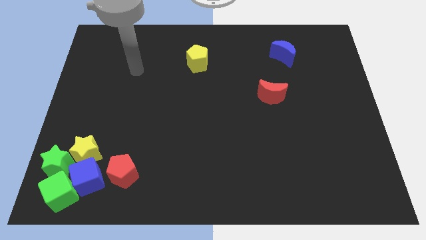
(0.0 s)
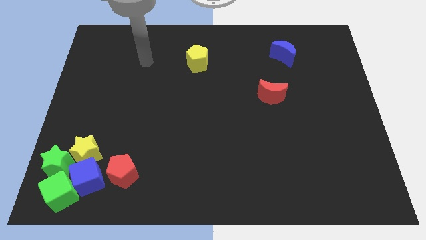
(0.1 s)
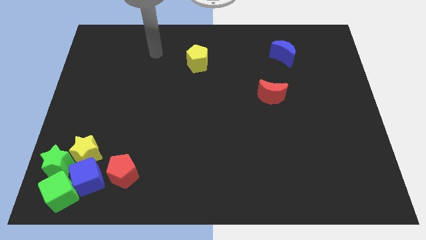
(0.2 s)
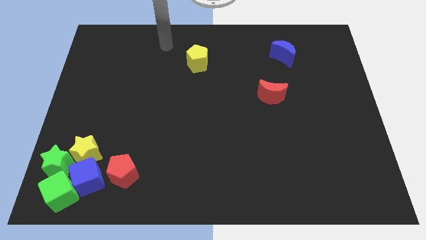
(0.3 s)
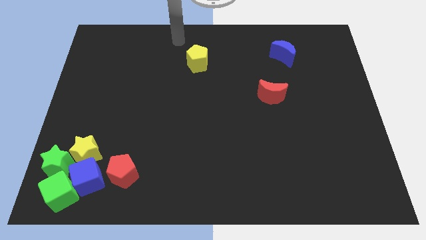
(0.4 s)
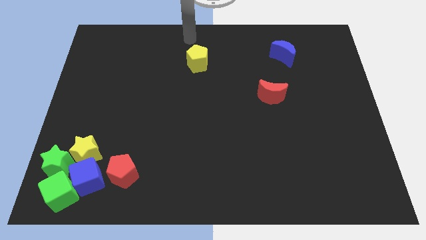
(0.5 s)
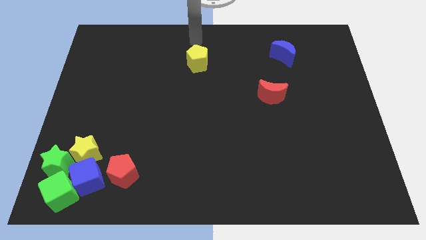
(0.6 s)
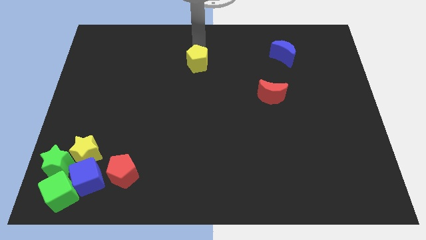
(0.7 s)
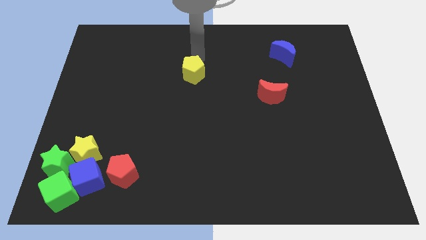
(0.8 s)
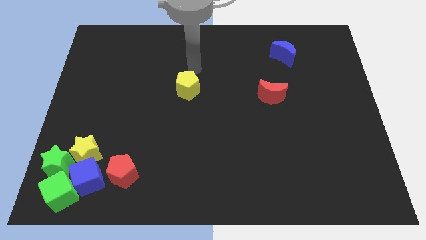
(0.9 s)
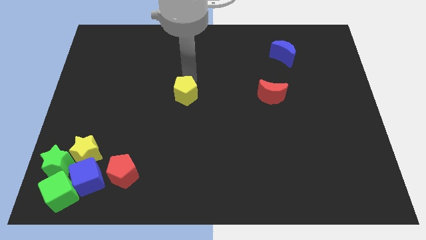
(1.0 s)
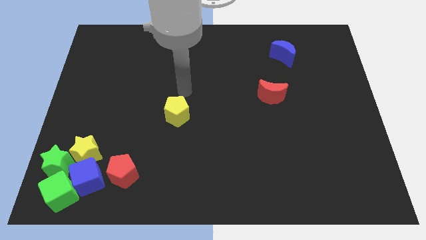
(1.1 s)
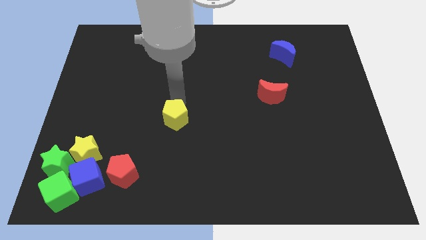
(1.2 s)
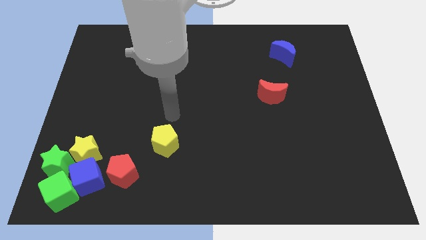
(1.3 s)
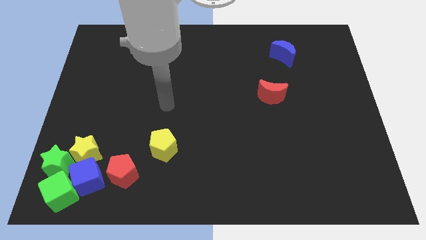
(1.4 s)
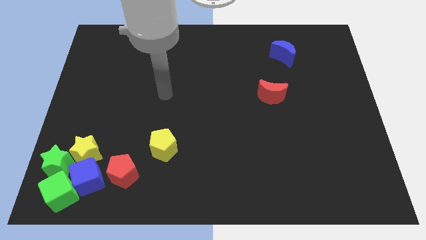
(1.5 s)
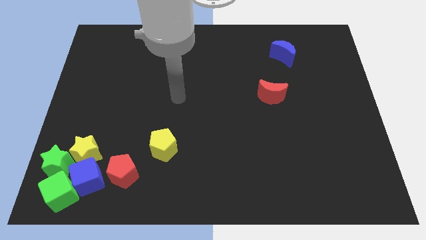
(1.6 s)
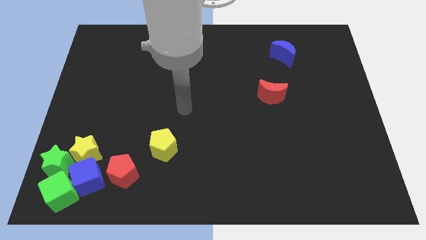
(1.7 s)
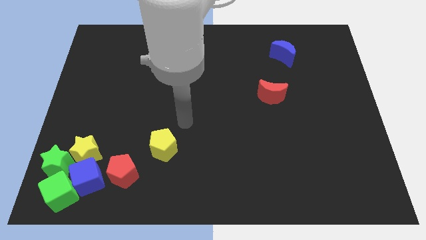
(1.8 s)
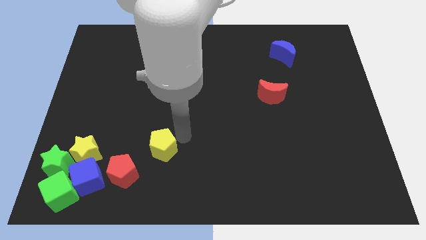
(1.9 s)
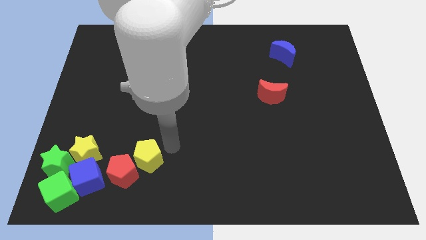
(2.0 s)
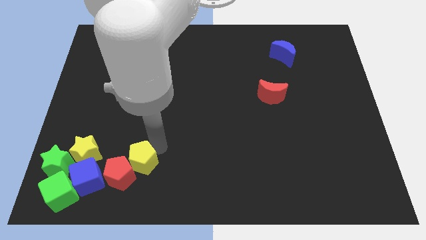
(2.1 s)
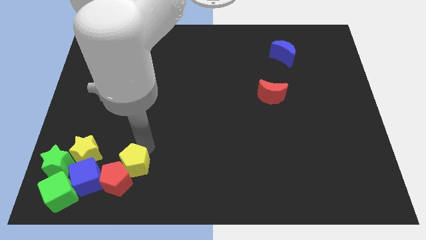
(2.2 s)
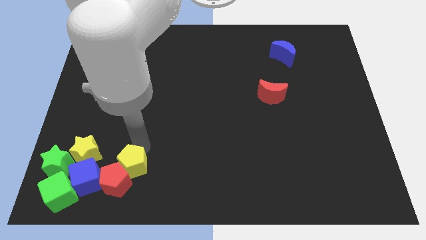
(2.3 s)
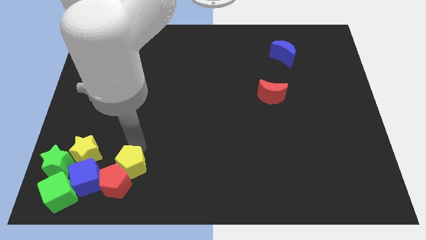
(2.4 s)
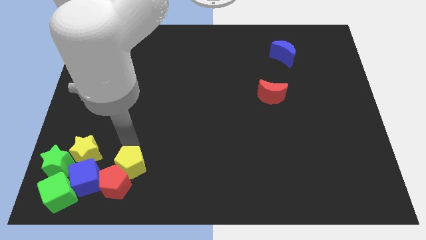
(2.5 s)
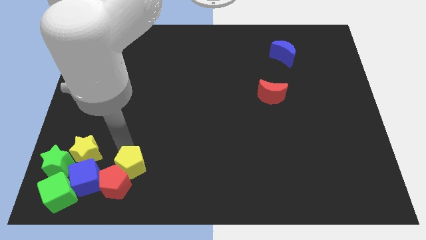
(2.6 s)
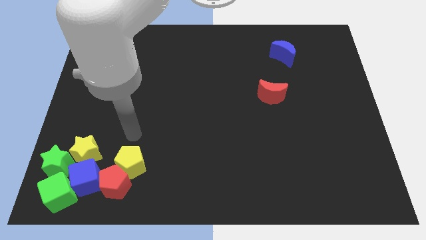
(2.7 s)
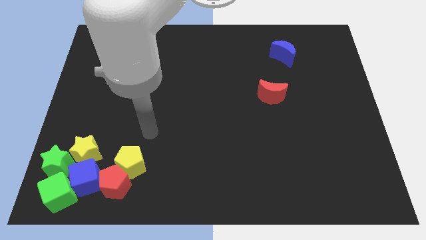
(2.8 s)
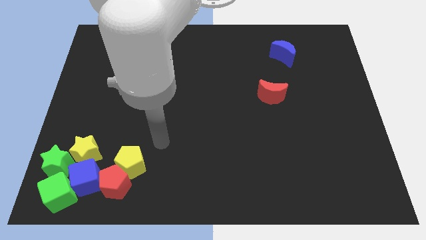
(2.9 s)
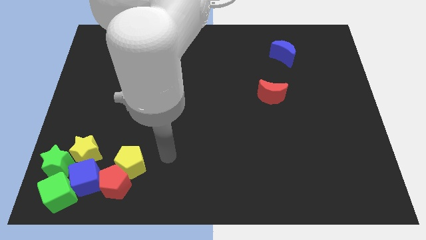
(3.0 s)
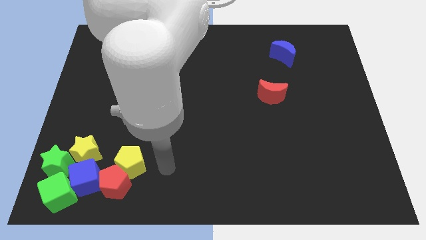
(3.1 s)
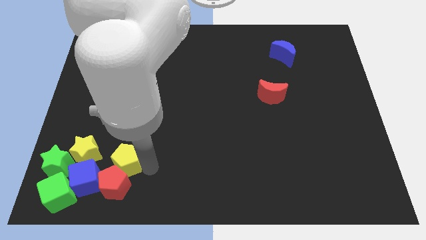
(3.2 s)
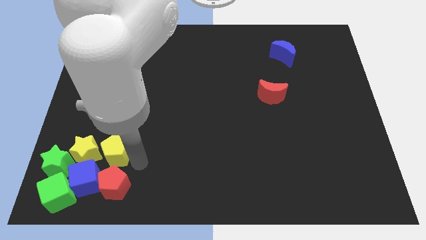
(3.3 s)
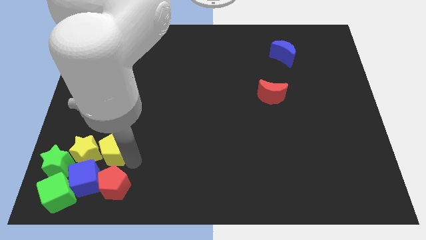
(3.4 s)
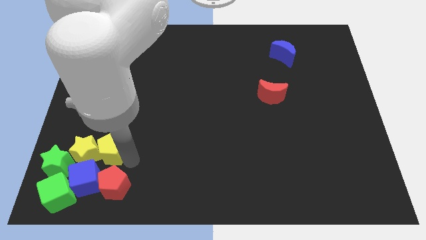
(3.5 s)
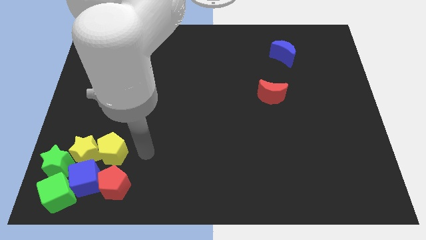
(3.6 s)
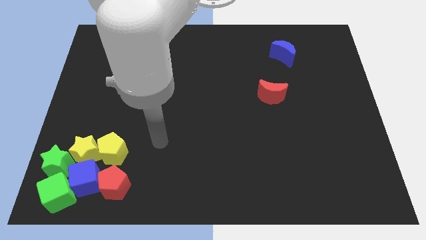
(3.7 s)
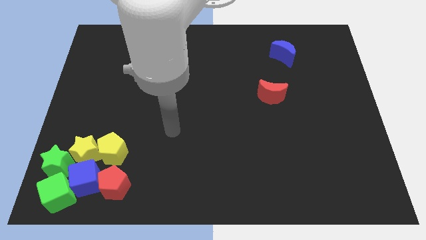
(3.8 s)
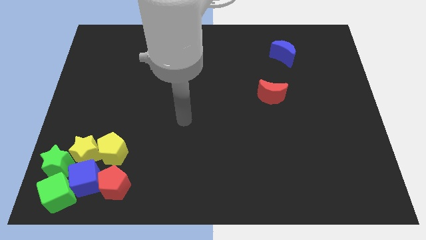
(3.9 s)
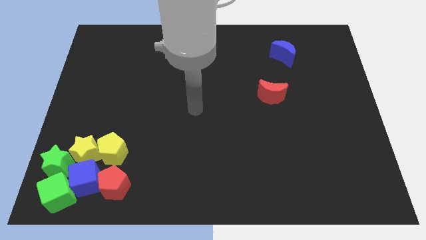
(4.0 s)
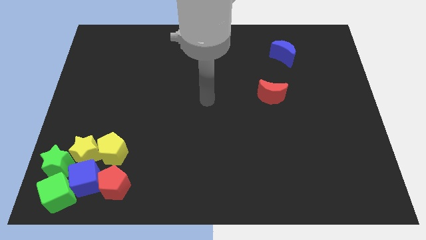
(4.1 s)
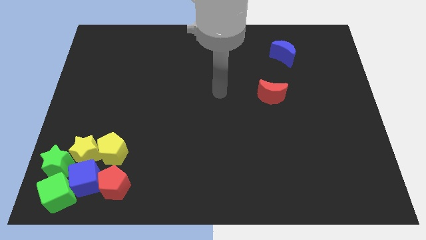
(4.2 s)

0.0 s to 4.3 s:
move the yellow pentagon above to the red pentagon

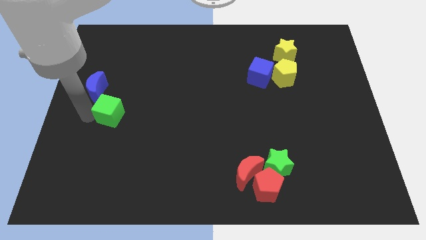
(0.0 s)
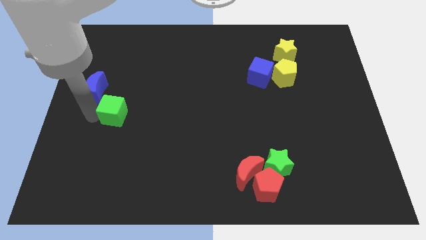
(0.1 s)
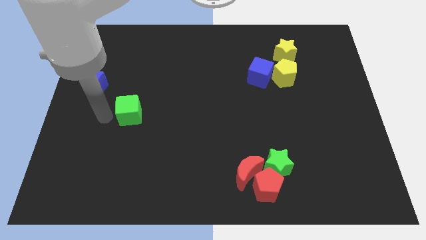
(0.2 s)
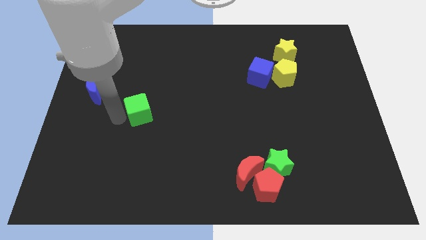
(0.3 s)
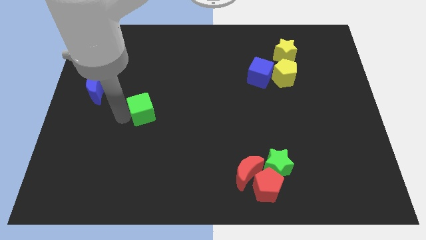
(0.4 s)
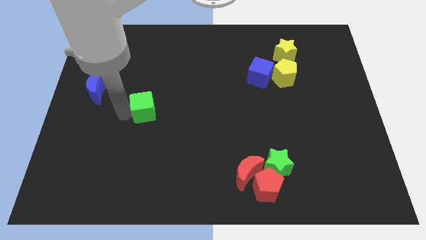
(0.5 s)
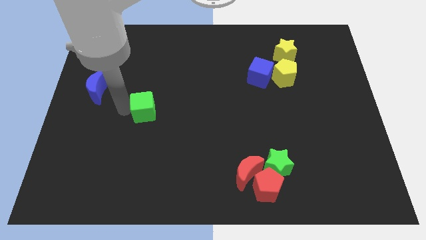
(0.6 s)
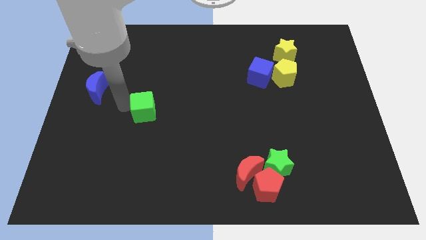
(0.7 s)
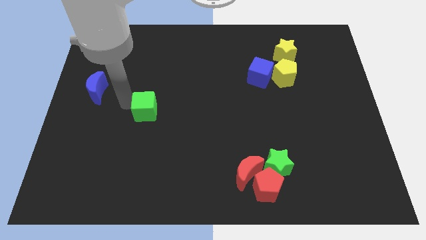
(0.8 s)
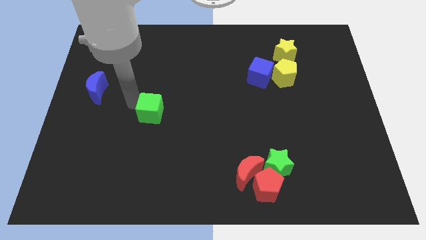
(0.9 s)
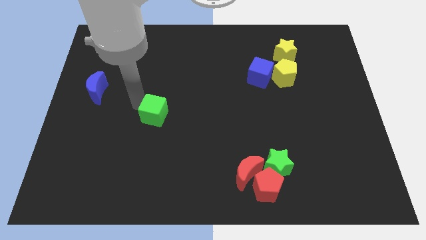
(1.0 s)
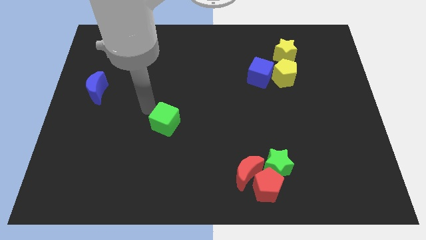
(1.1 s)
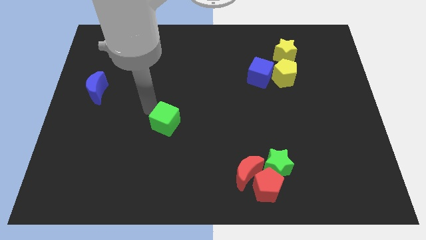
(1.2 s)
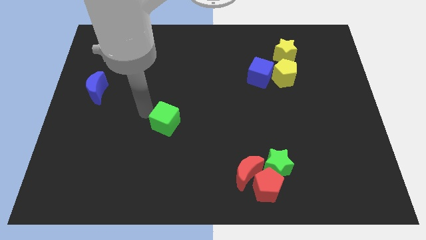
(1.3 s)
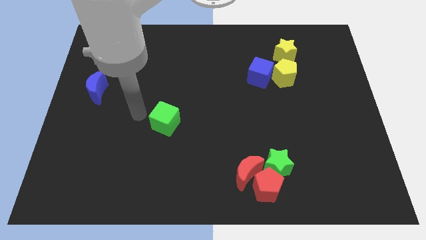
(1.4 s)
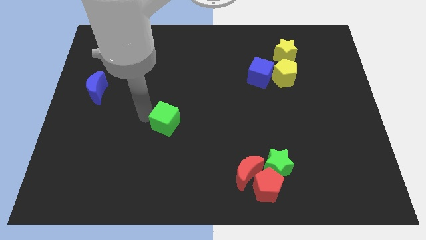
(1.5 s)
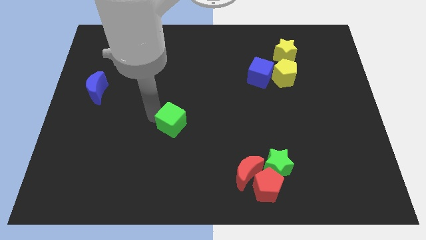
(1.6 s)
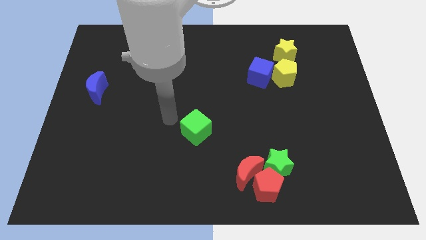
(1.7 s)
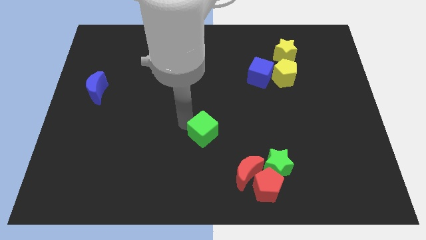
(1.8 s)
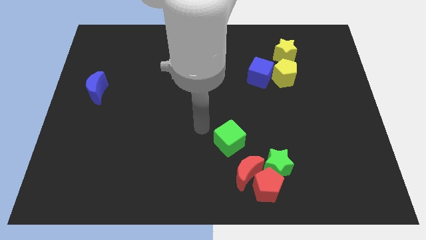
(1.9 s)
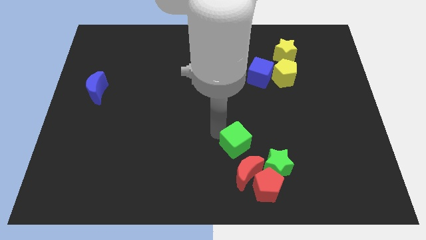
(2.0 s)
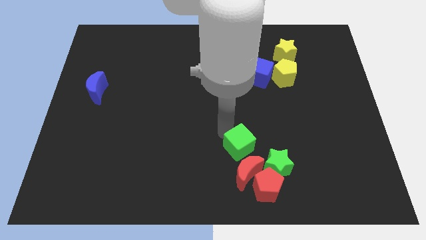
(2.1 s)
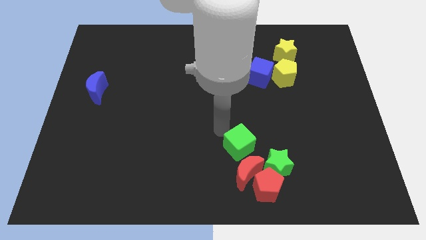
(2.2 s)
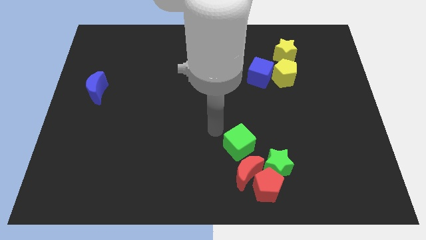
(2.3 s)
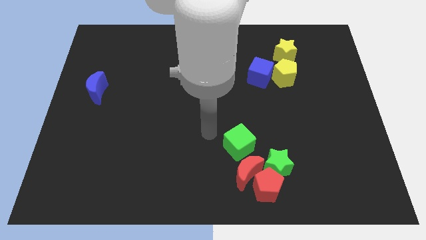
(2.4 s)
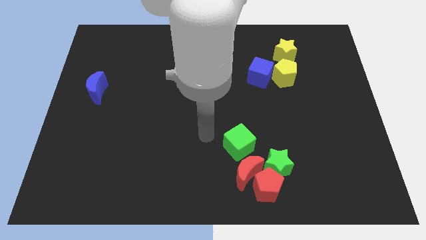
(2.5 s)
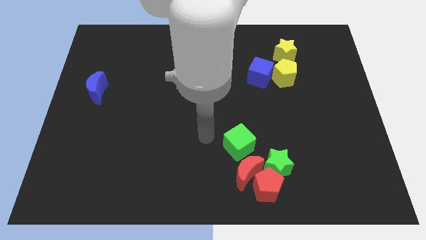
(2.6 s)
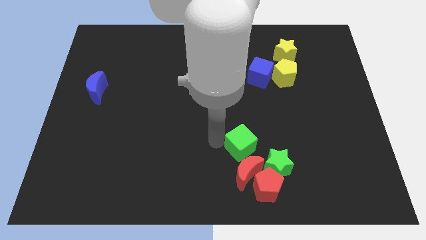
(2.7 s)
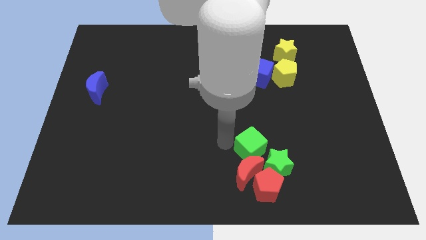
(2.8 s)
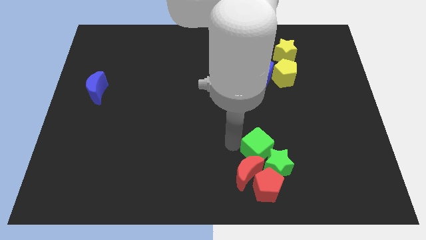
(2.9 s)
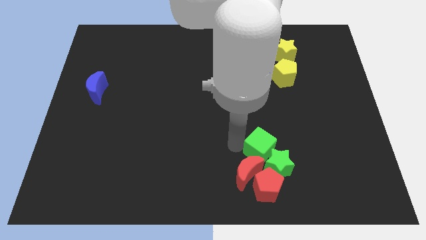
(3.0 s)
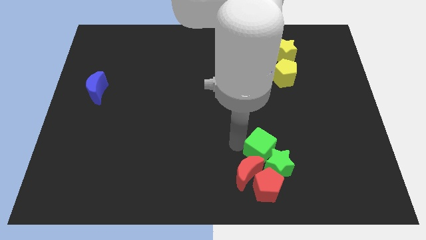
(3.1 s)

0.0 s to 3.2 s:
place the green cube to the top left of the green star

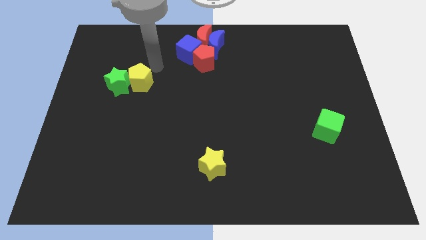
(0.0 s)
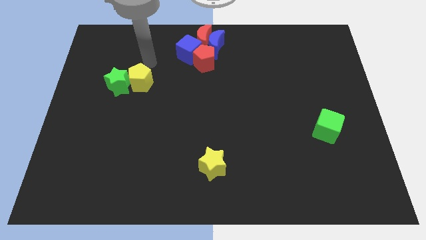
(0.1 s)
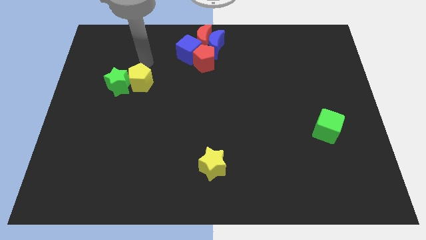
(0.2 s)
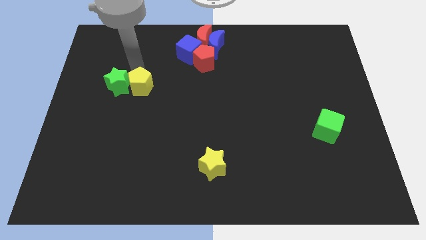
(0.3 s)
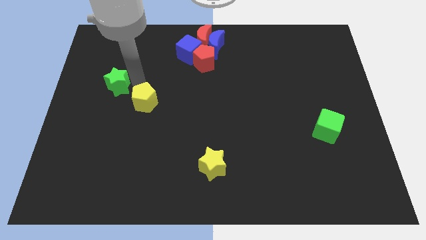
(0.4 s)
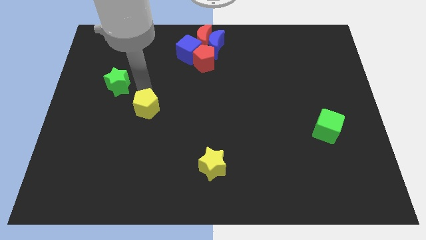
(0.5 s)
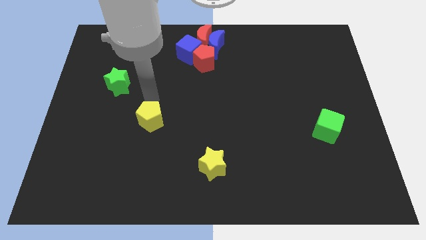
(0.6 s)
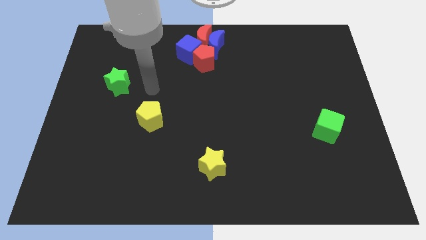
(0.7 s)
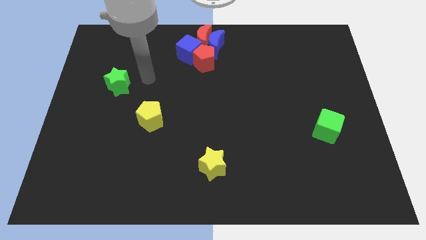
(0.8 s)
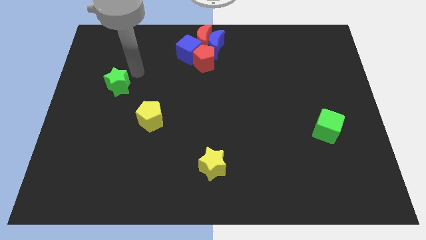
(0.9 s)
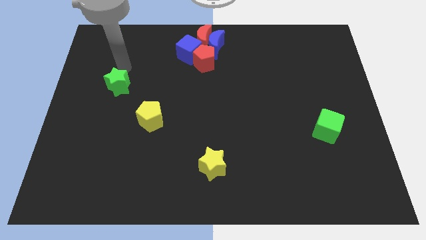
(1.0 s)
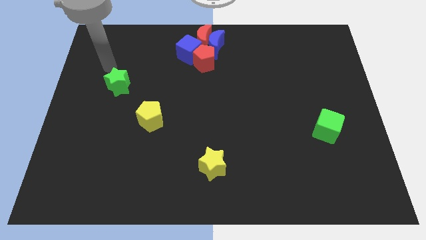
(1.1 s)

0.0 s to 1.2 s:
push the yellow pentagon away from the green star

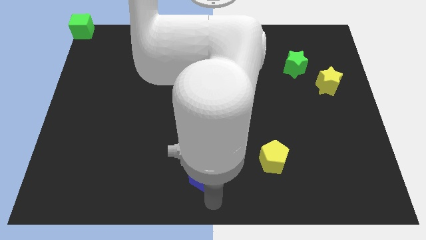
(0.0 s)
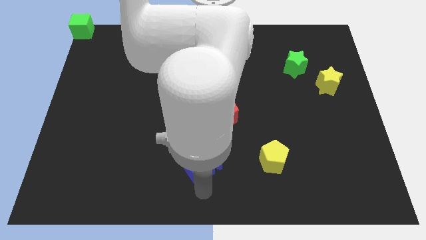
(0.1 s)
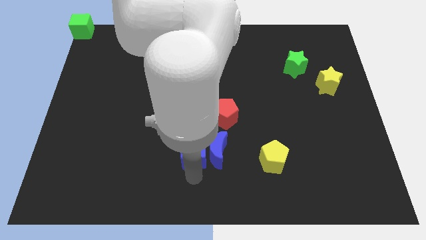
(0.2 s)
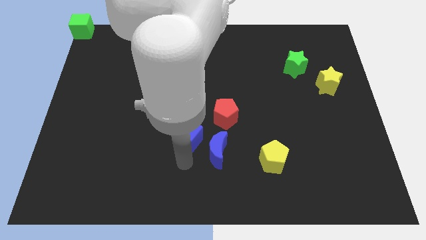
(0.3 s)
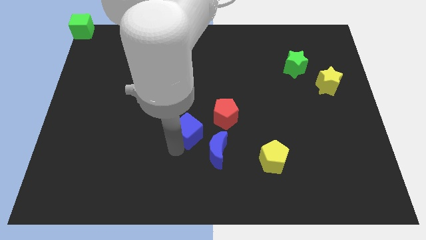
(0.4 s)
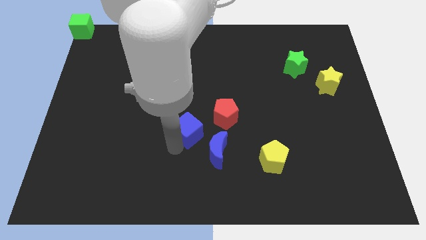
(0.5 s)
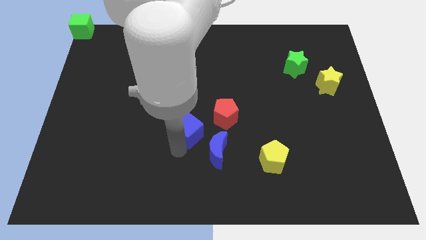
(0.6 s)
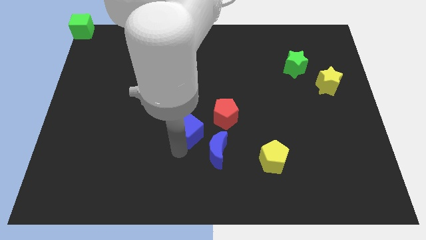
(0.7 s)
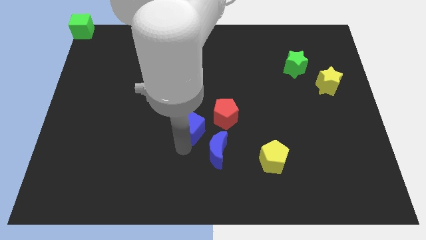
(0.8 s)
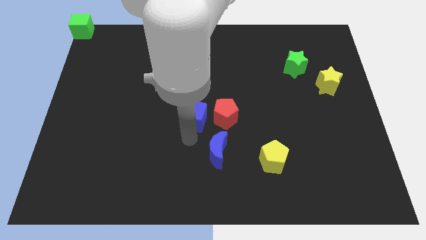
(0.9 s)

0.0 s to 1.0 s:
move the blue cube to the left of the red pentagon
